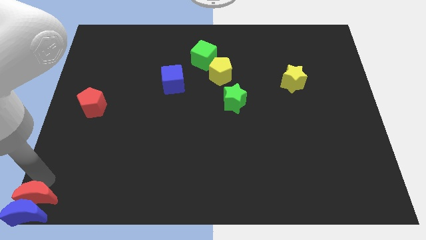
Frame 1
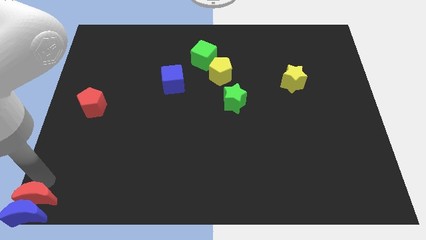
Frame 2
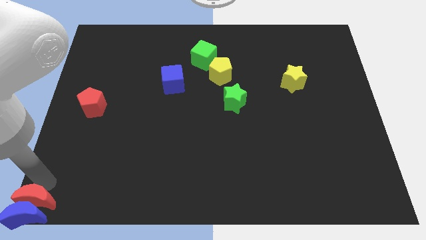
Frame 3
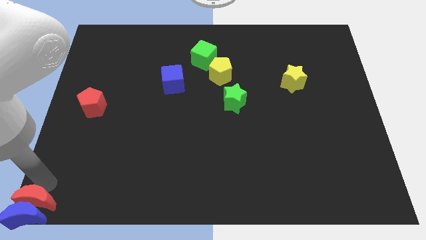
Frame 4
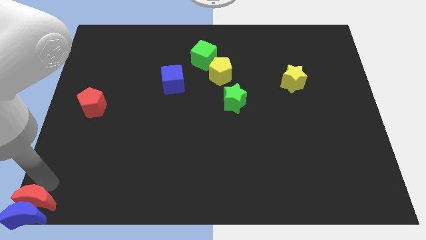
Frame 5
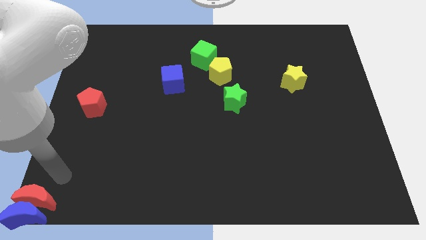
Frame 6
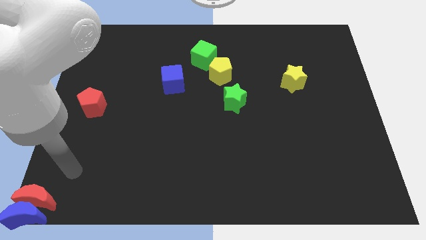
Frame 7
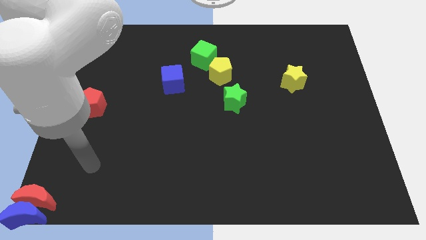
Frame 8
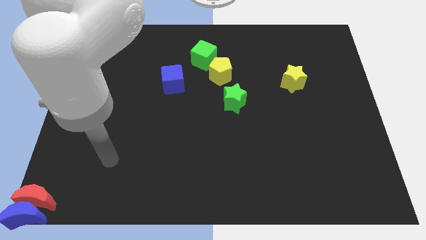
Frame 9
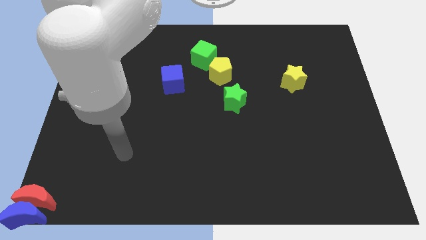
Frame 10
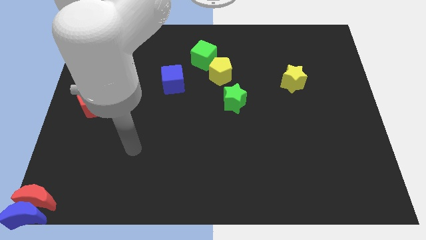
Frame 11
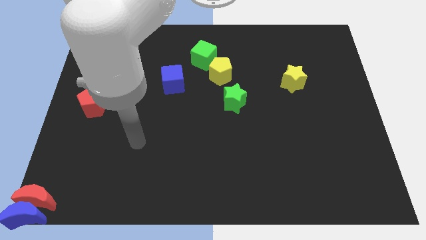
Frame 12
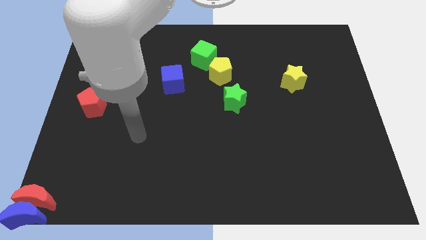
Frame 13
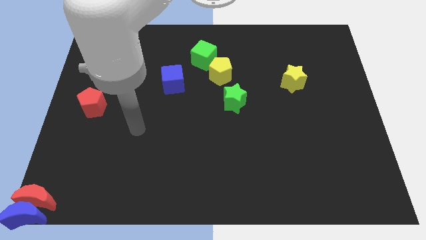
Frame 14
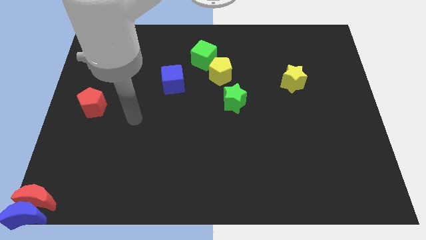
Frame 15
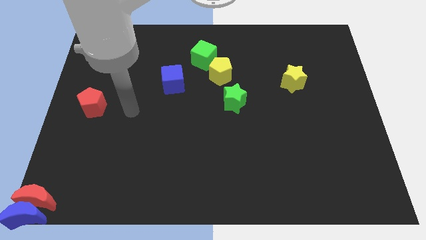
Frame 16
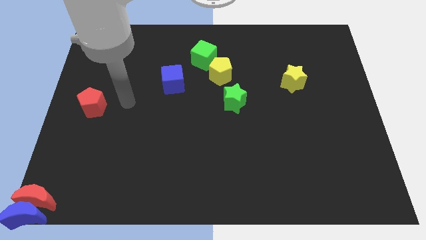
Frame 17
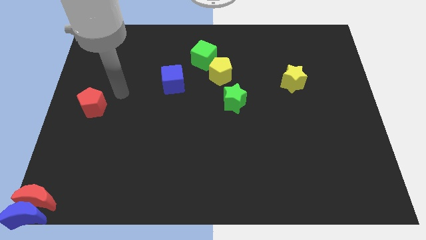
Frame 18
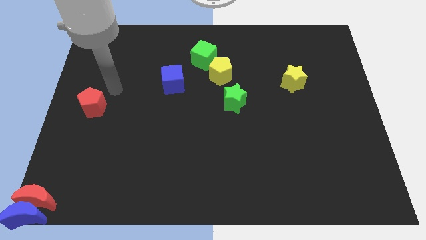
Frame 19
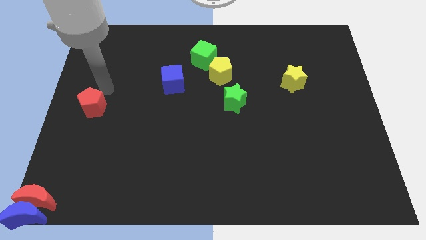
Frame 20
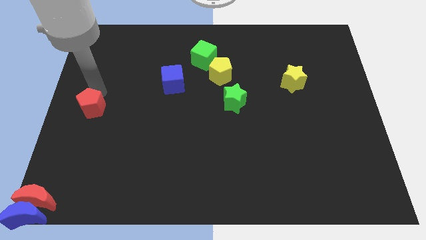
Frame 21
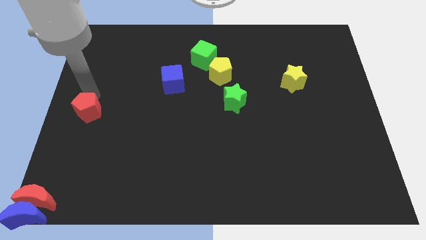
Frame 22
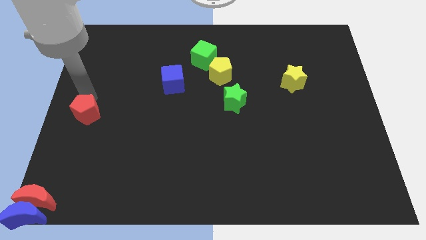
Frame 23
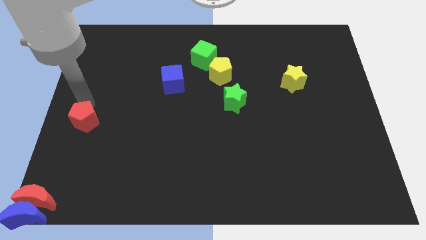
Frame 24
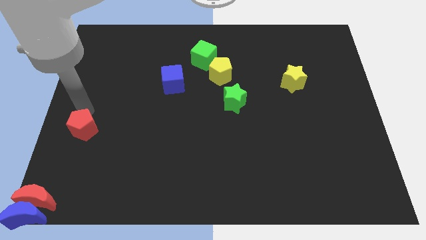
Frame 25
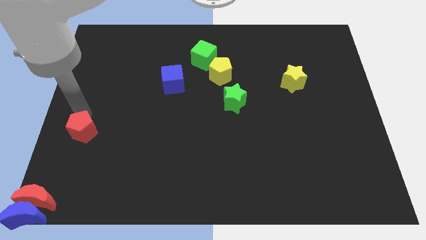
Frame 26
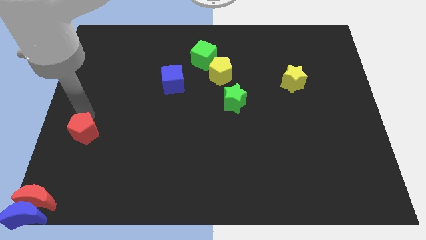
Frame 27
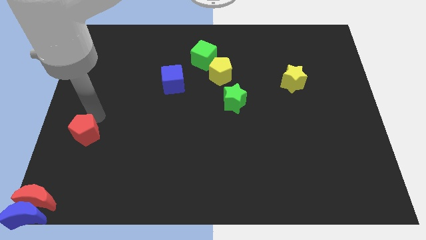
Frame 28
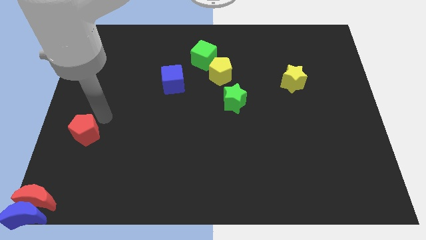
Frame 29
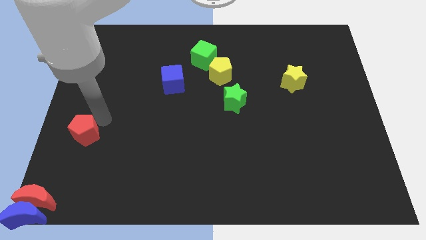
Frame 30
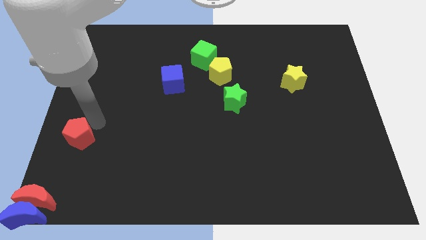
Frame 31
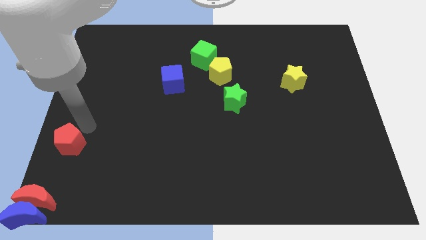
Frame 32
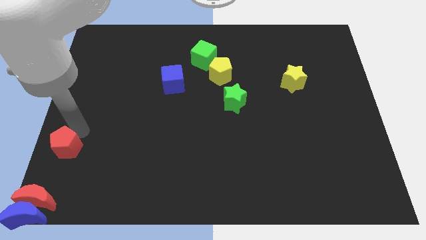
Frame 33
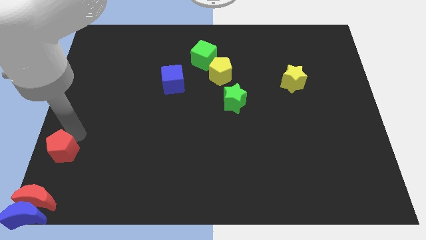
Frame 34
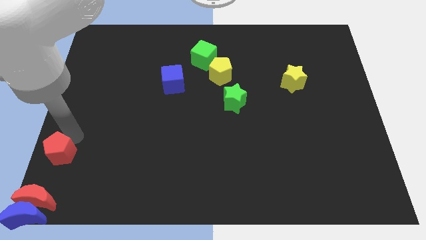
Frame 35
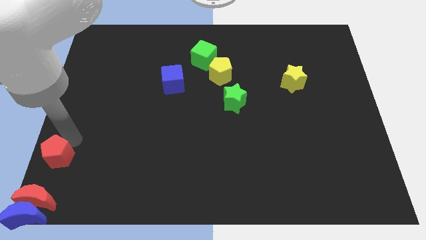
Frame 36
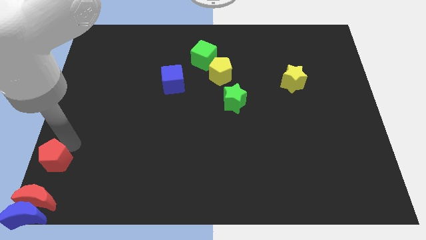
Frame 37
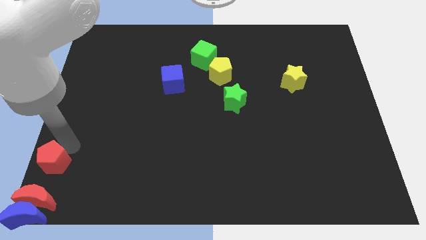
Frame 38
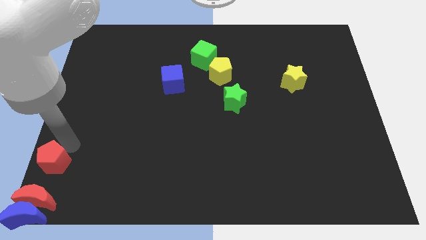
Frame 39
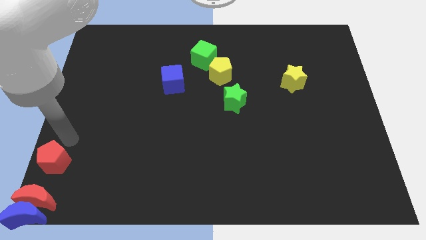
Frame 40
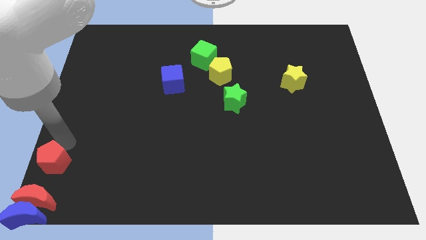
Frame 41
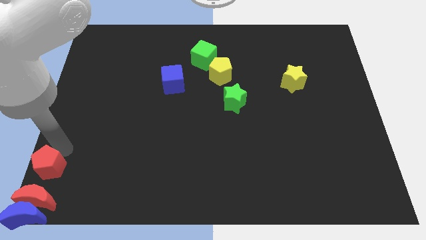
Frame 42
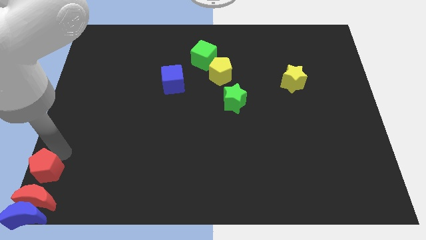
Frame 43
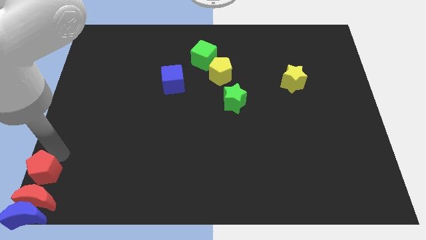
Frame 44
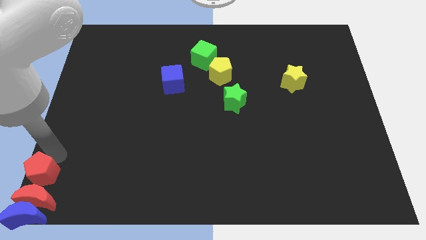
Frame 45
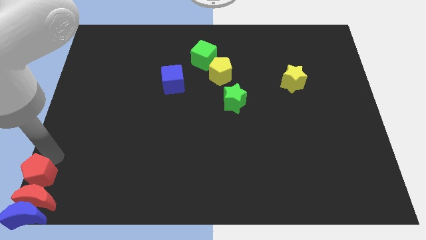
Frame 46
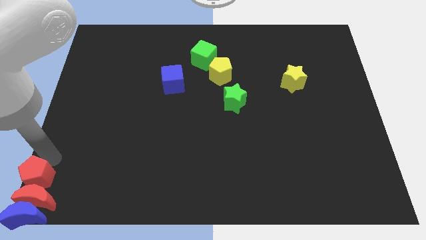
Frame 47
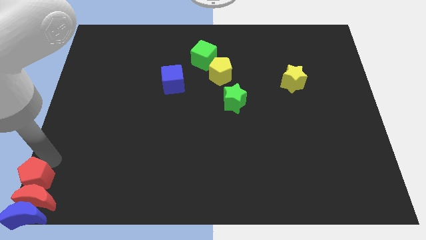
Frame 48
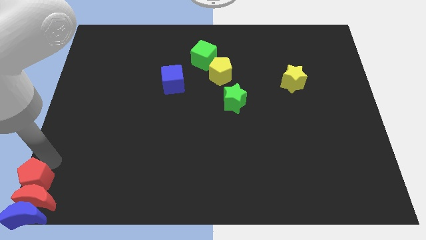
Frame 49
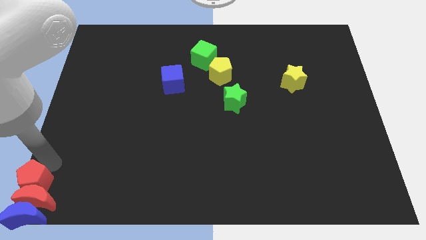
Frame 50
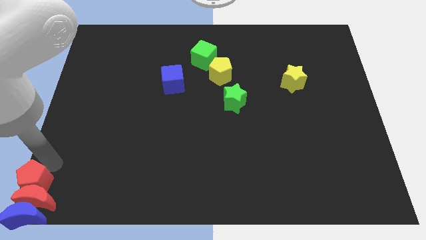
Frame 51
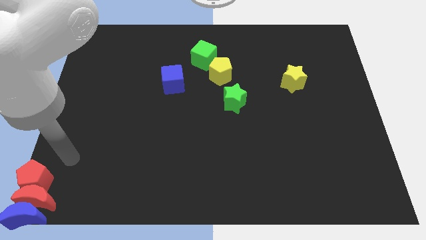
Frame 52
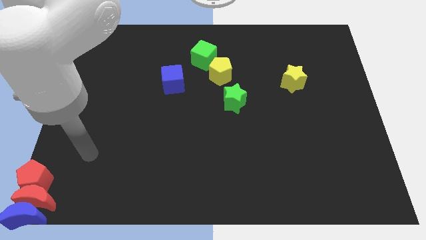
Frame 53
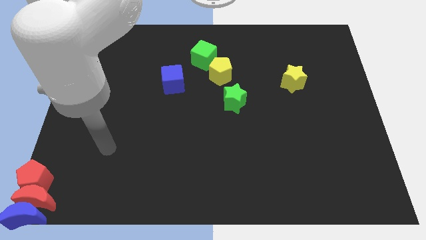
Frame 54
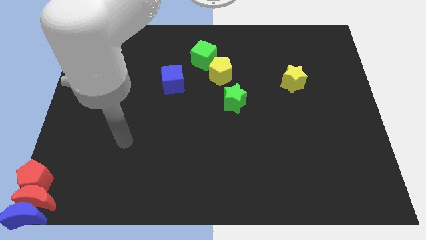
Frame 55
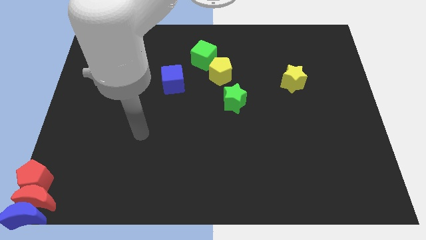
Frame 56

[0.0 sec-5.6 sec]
place the red pentagon above the red moon

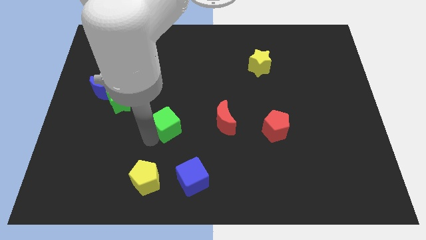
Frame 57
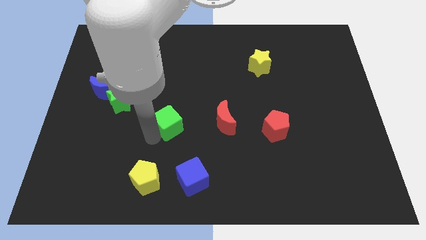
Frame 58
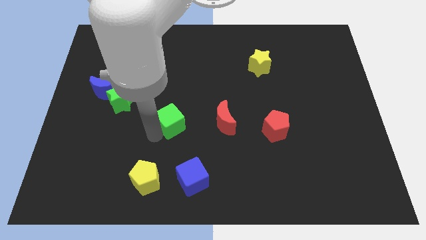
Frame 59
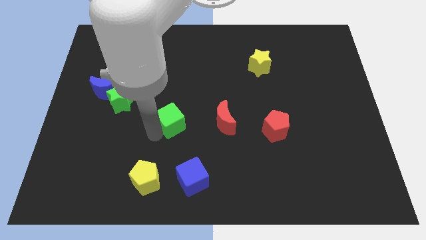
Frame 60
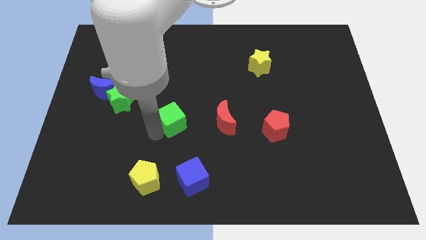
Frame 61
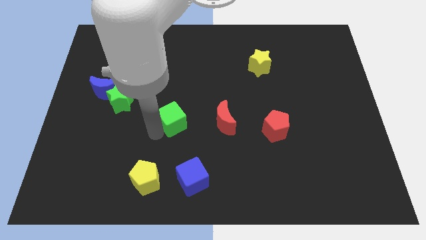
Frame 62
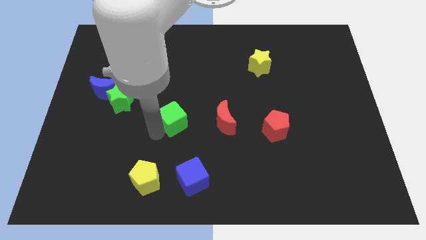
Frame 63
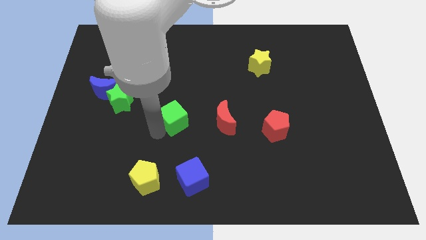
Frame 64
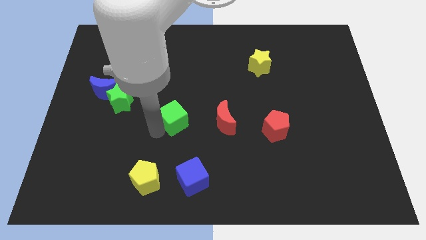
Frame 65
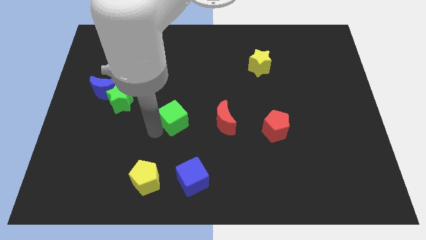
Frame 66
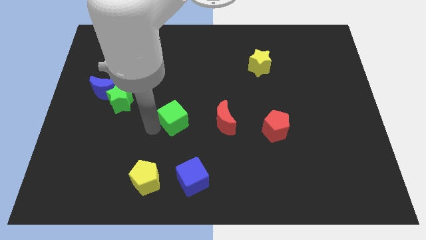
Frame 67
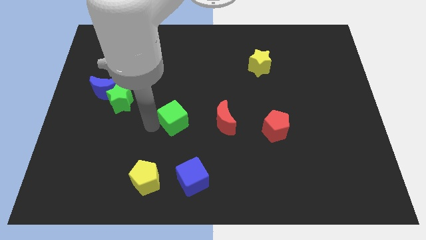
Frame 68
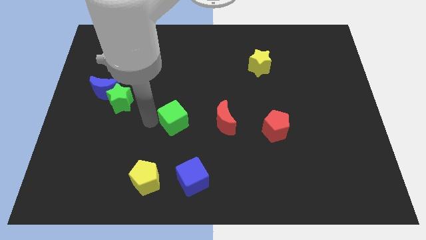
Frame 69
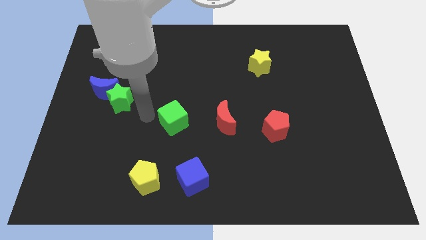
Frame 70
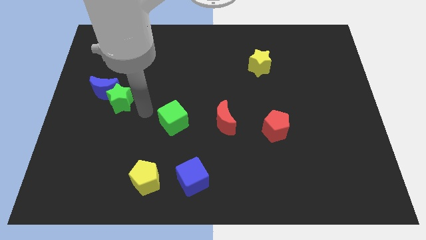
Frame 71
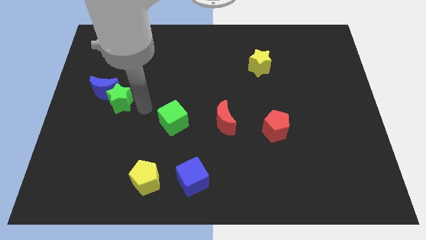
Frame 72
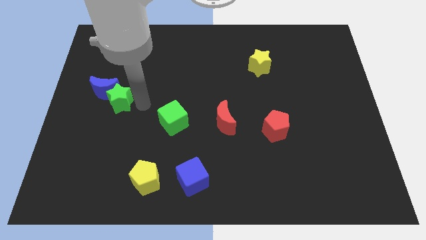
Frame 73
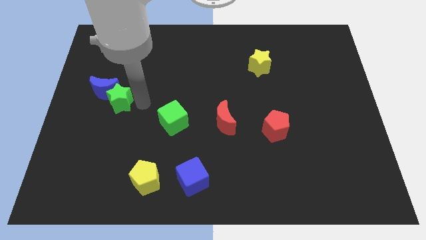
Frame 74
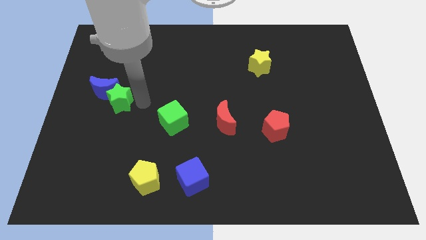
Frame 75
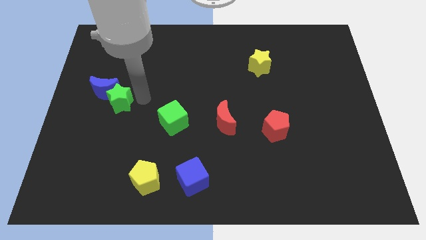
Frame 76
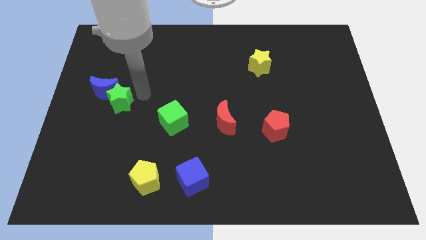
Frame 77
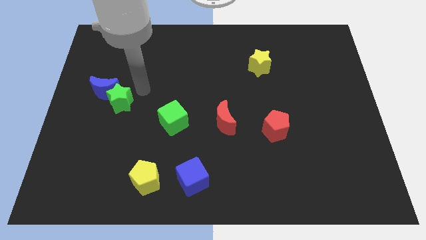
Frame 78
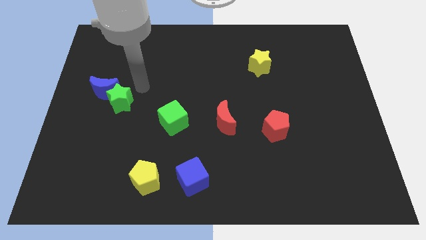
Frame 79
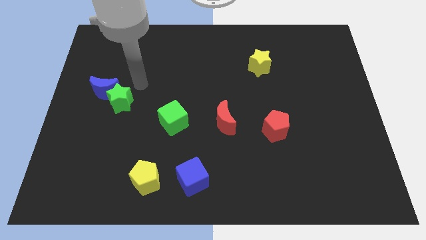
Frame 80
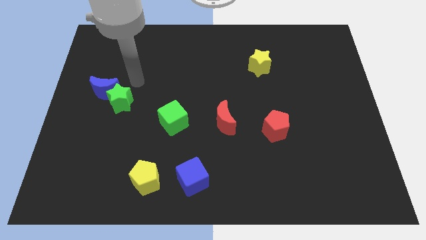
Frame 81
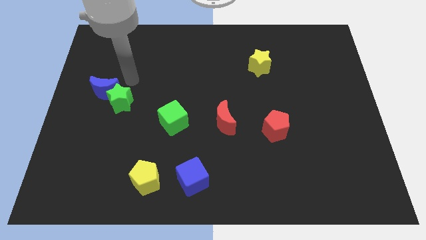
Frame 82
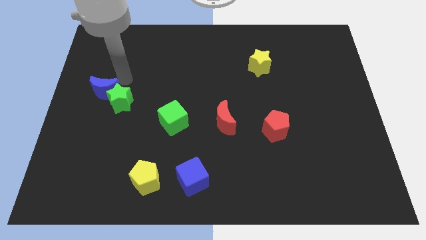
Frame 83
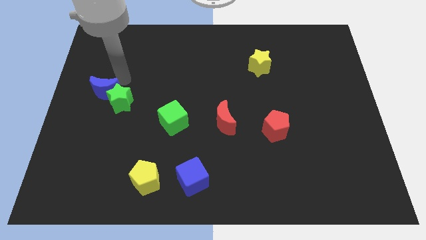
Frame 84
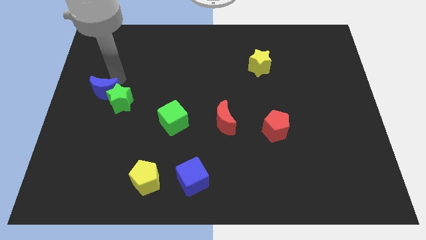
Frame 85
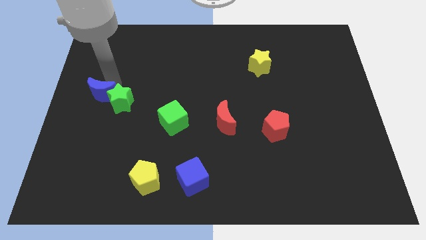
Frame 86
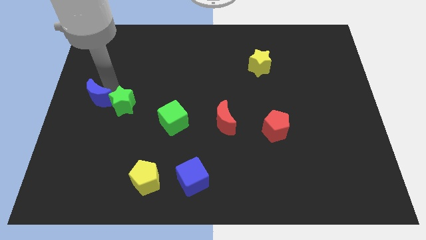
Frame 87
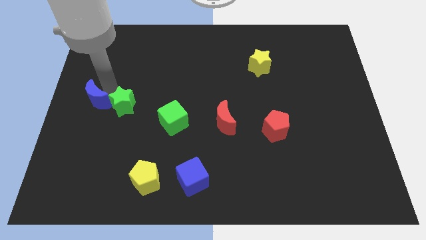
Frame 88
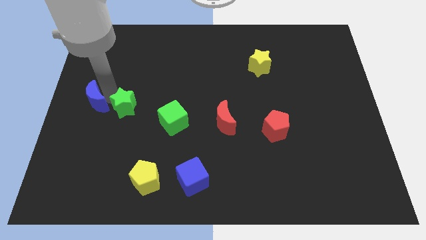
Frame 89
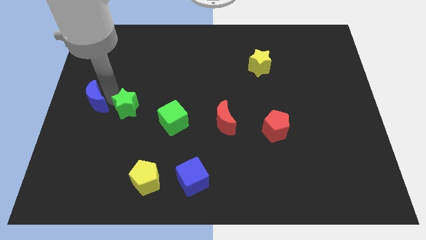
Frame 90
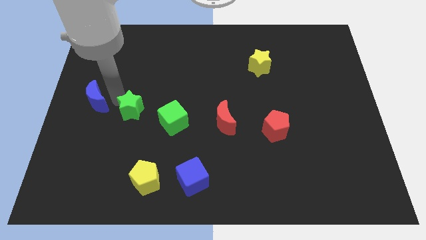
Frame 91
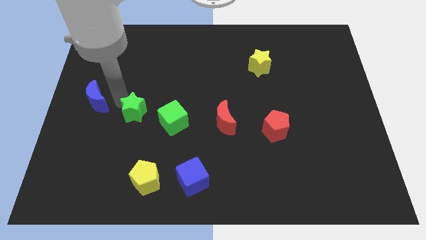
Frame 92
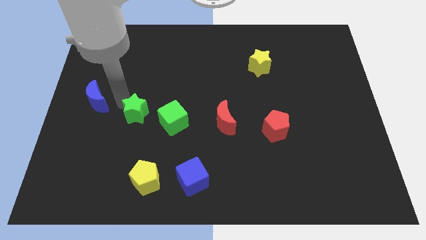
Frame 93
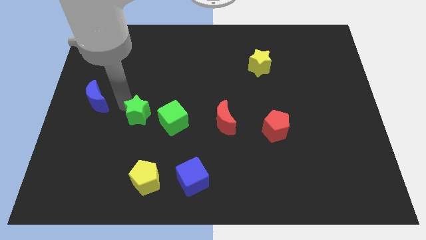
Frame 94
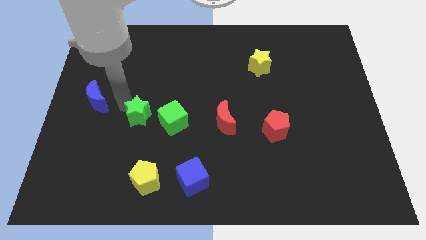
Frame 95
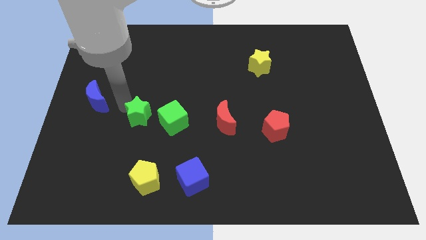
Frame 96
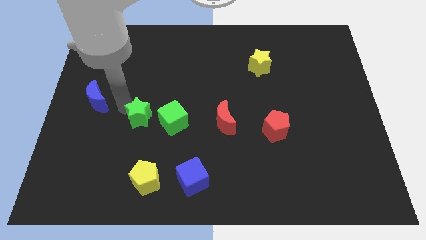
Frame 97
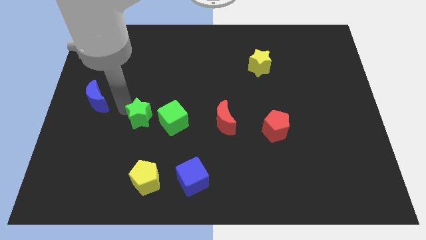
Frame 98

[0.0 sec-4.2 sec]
push green star towards green cube
